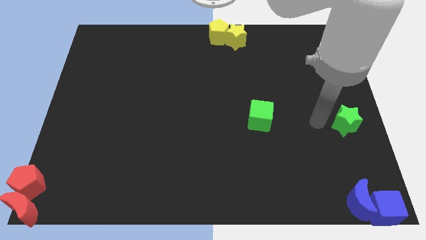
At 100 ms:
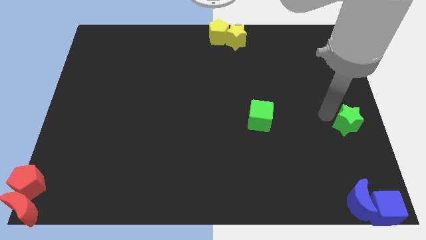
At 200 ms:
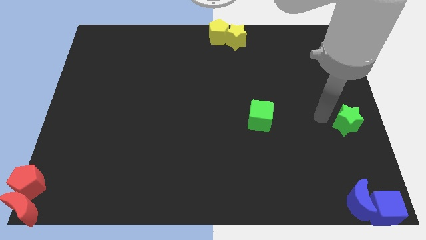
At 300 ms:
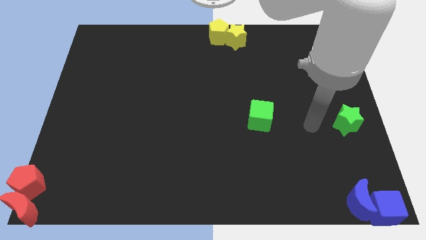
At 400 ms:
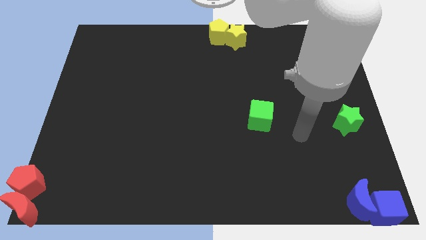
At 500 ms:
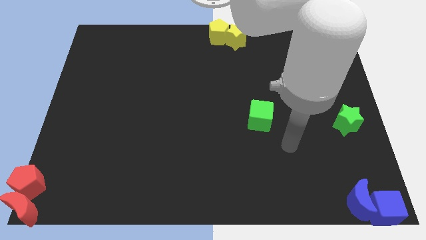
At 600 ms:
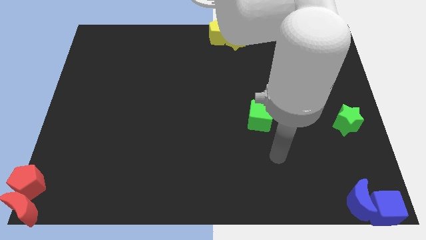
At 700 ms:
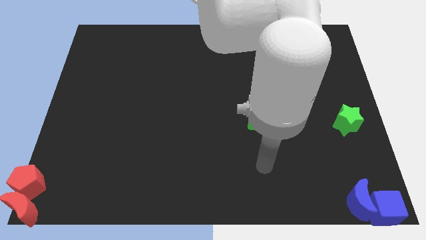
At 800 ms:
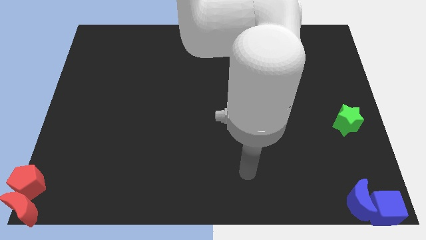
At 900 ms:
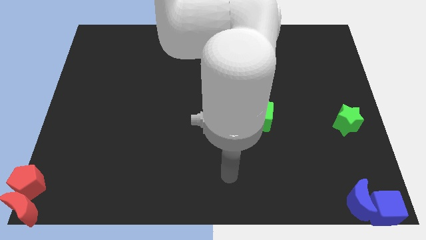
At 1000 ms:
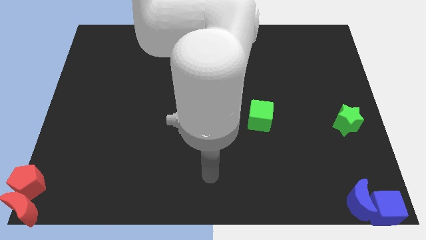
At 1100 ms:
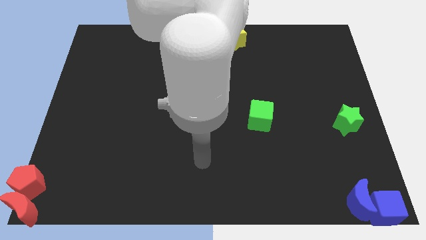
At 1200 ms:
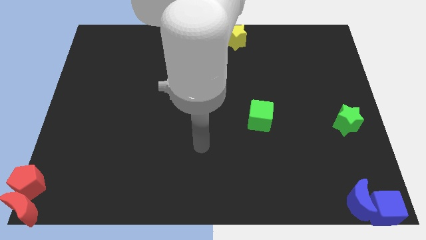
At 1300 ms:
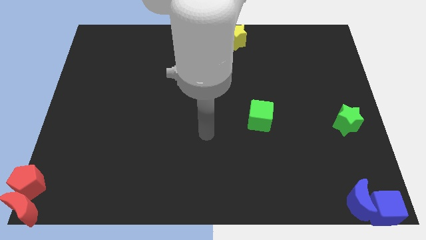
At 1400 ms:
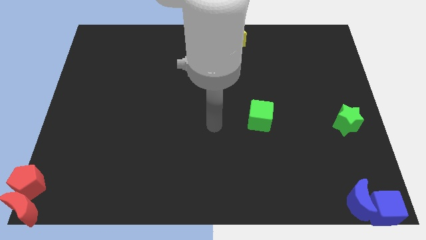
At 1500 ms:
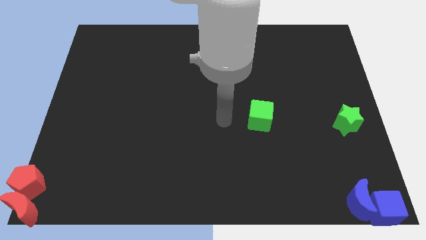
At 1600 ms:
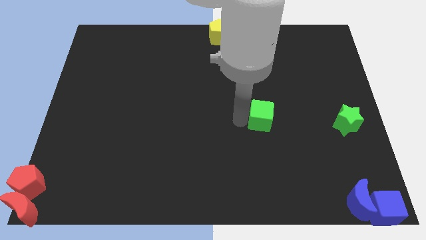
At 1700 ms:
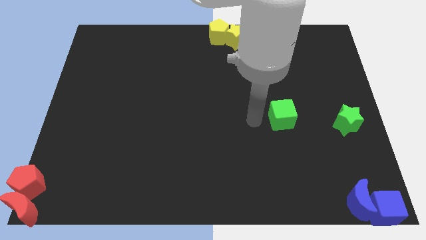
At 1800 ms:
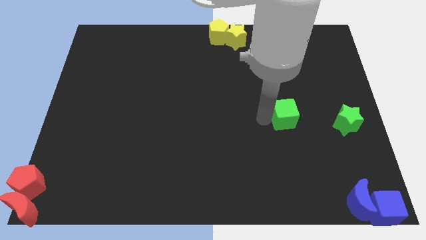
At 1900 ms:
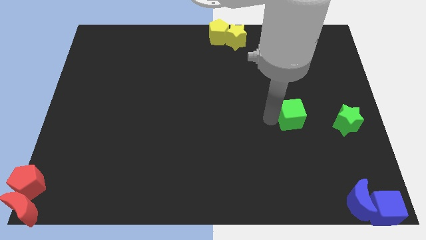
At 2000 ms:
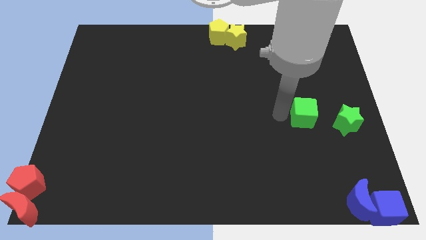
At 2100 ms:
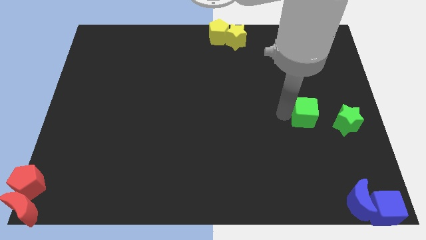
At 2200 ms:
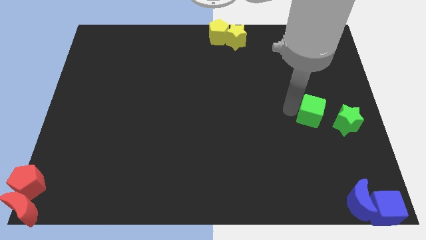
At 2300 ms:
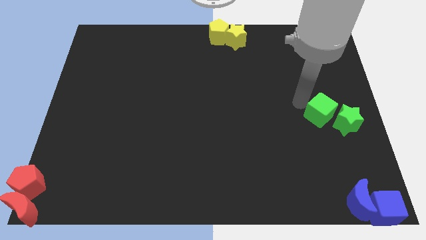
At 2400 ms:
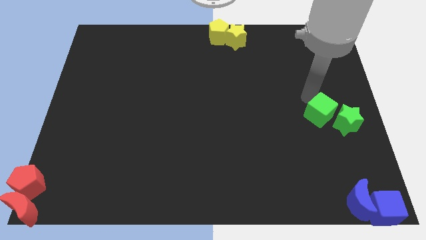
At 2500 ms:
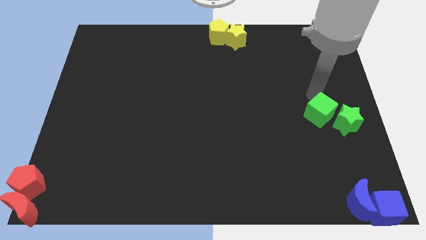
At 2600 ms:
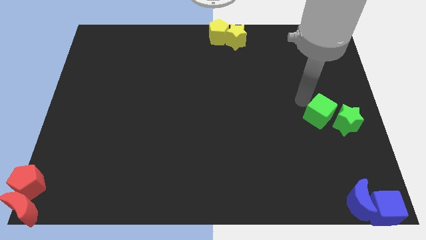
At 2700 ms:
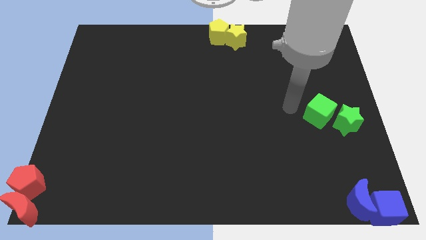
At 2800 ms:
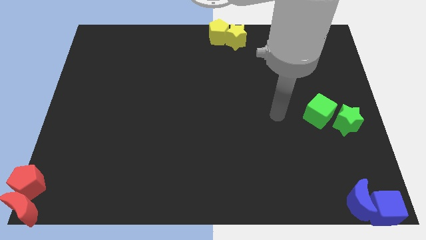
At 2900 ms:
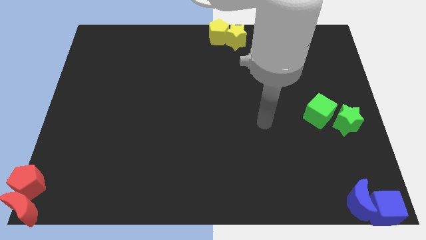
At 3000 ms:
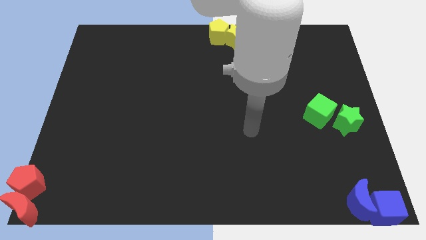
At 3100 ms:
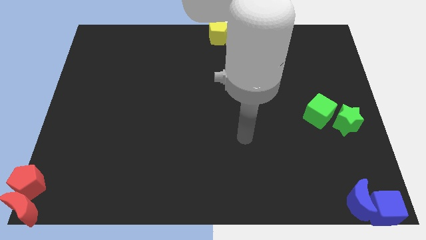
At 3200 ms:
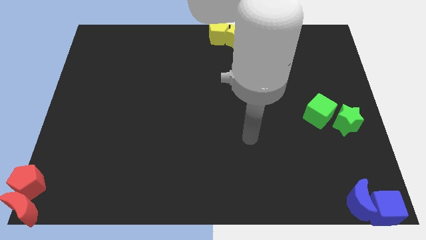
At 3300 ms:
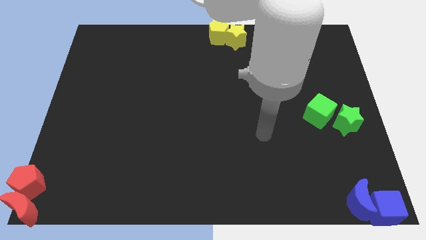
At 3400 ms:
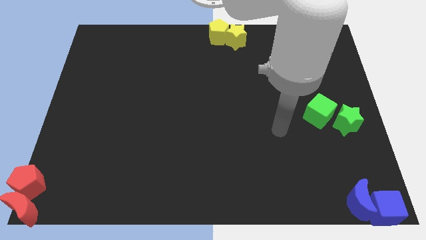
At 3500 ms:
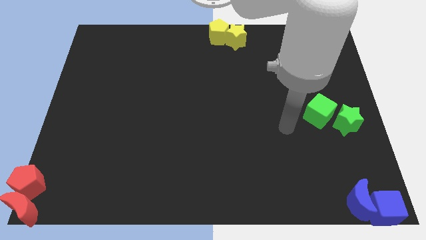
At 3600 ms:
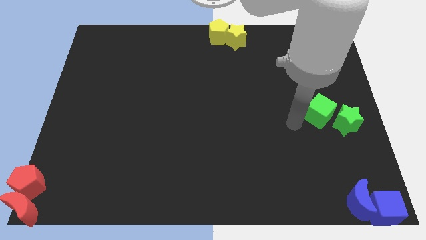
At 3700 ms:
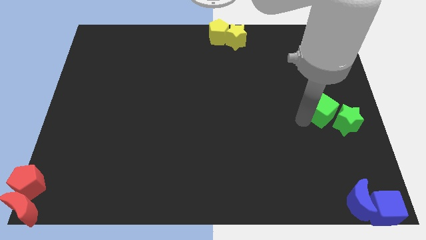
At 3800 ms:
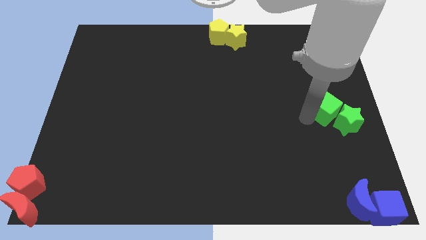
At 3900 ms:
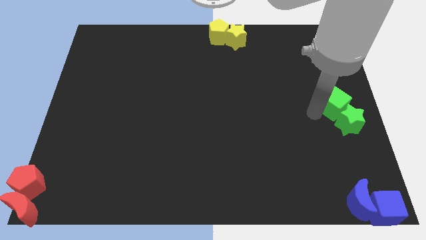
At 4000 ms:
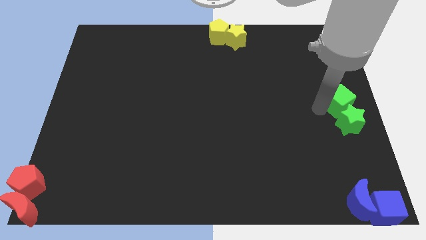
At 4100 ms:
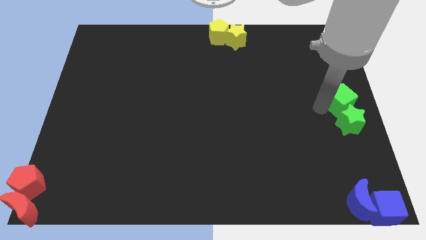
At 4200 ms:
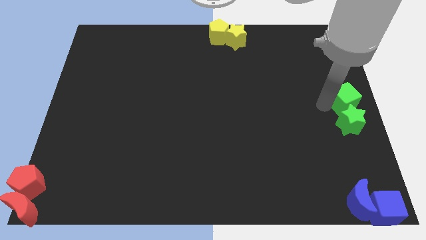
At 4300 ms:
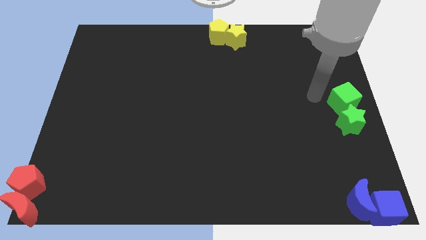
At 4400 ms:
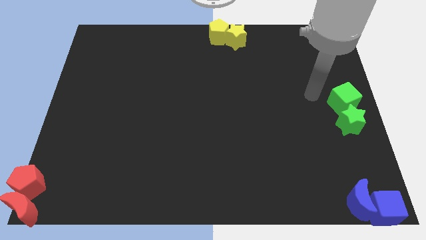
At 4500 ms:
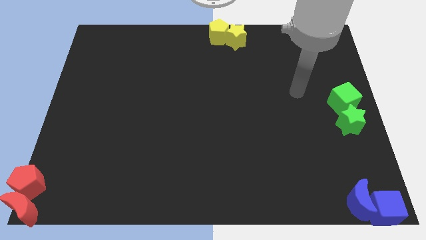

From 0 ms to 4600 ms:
slide the green cube at the center right side of the board

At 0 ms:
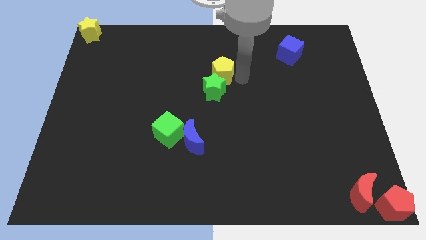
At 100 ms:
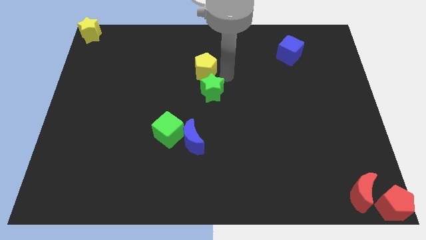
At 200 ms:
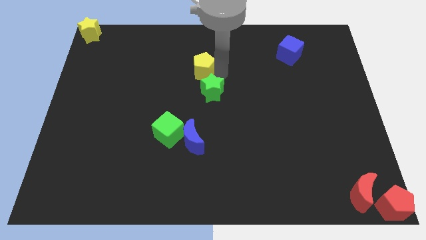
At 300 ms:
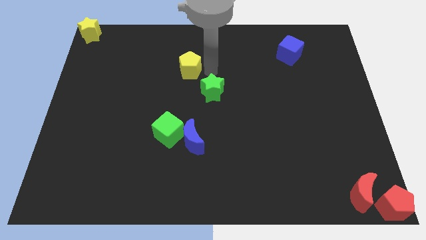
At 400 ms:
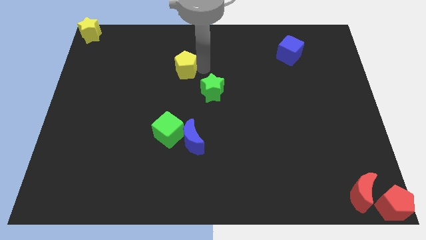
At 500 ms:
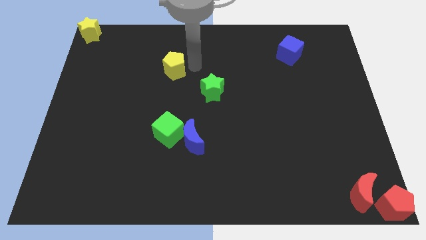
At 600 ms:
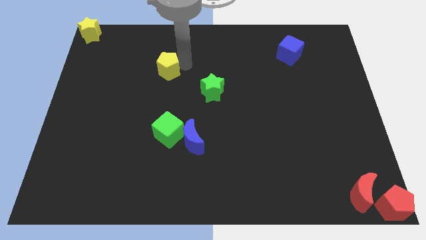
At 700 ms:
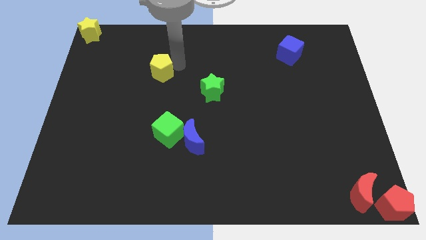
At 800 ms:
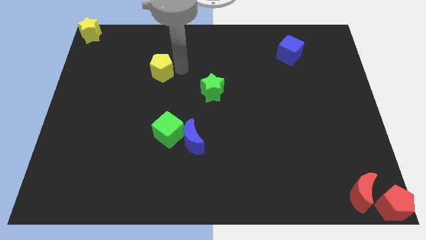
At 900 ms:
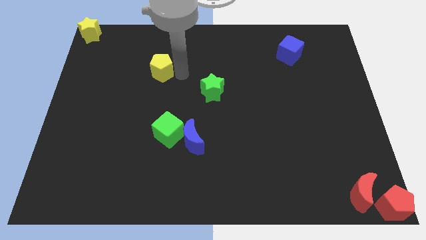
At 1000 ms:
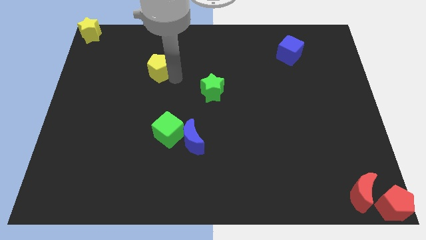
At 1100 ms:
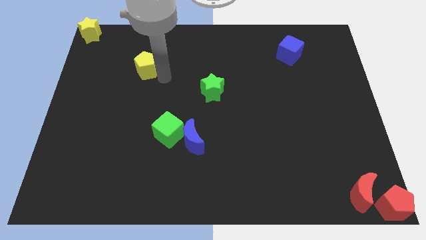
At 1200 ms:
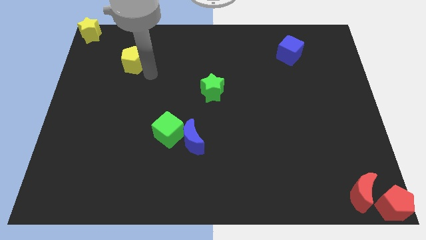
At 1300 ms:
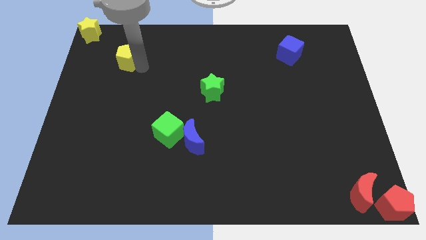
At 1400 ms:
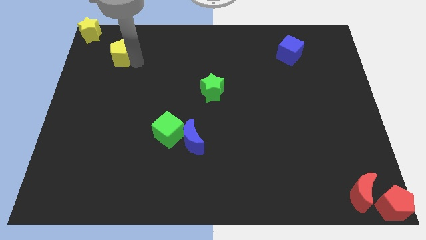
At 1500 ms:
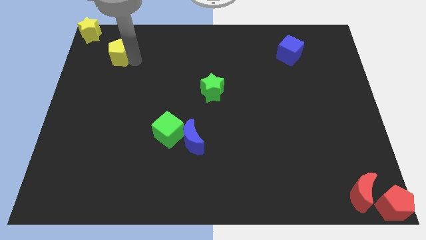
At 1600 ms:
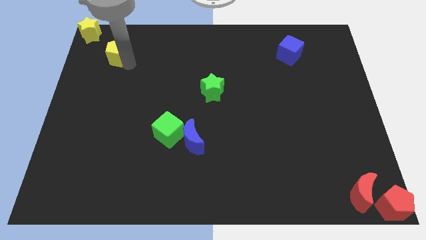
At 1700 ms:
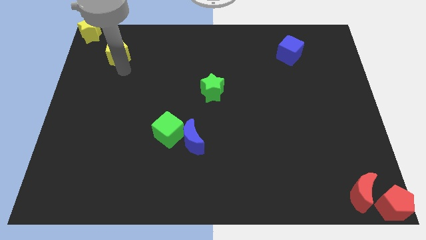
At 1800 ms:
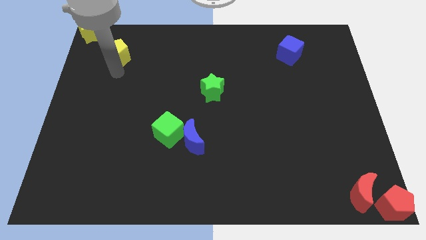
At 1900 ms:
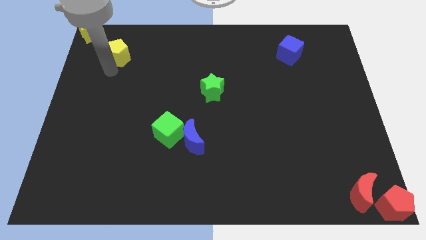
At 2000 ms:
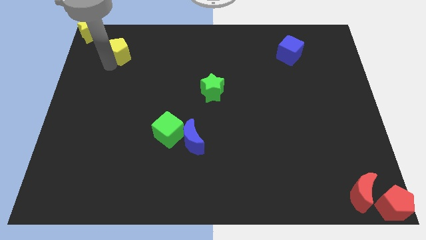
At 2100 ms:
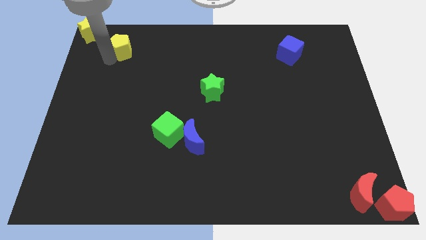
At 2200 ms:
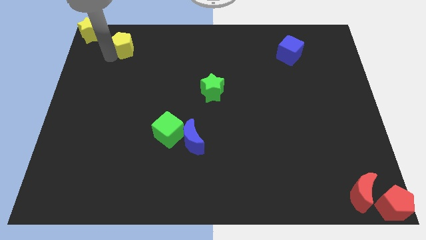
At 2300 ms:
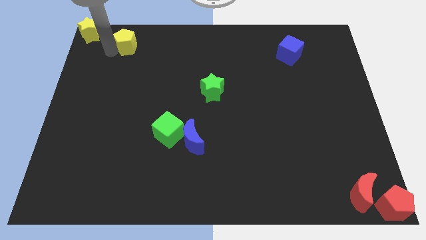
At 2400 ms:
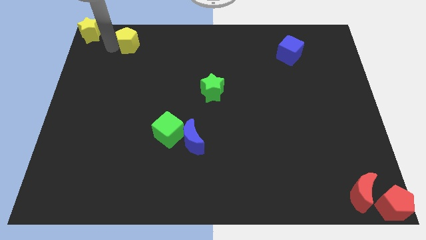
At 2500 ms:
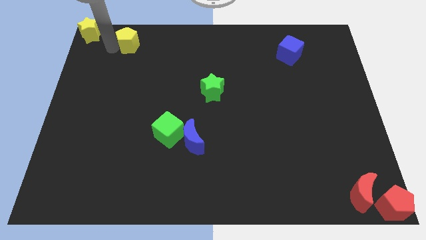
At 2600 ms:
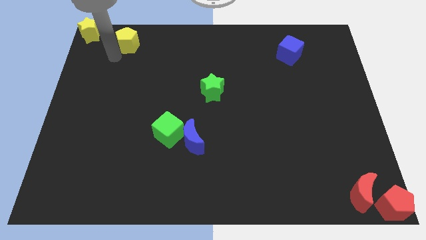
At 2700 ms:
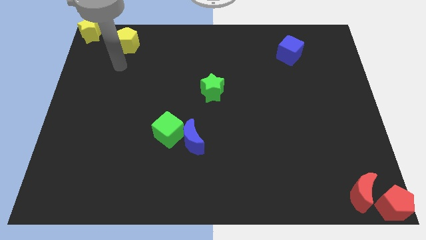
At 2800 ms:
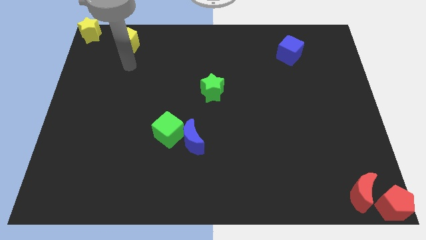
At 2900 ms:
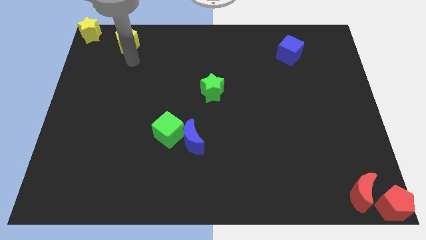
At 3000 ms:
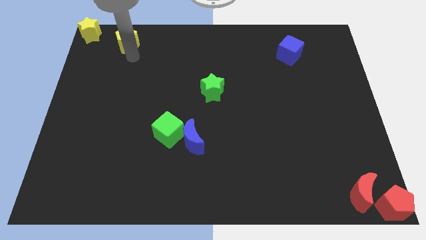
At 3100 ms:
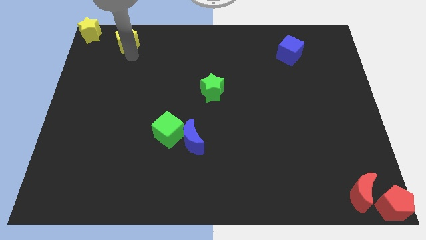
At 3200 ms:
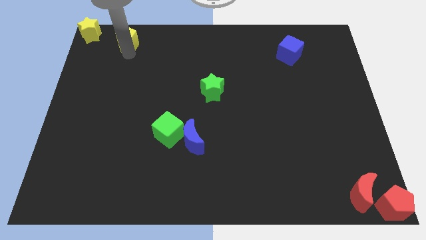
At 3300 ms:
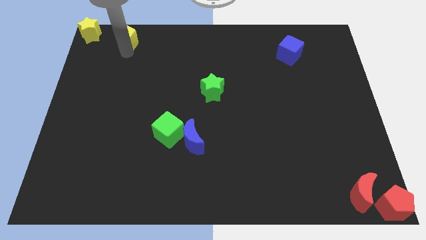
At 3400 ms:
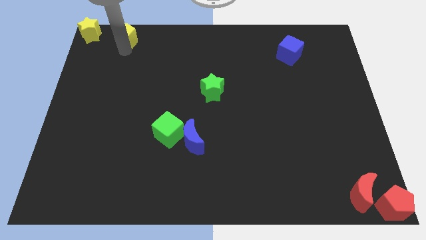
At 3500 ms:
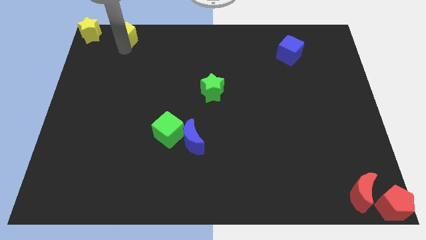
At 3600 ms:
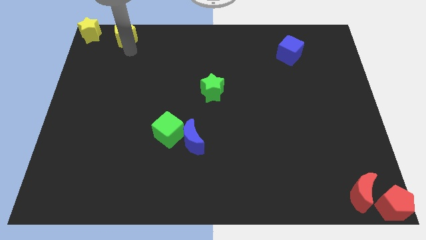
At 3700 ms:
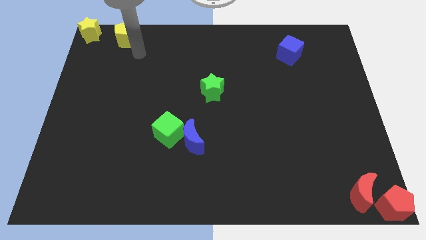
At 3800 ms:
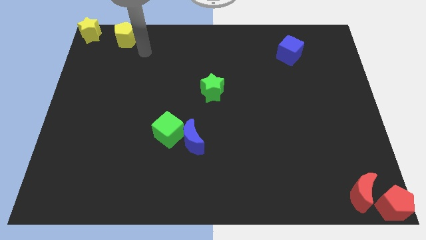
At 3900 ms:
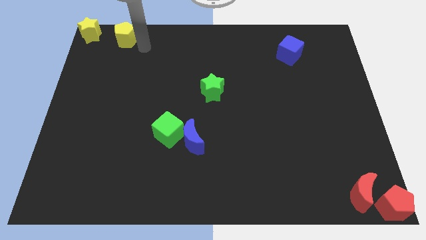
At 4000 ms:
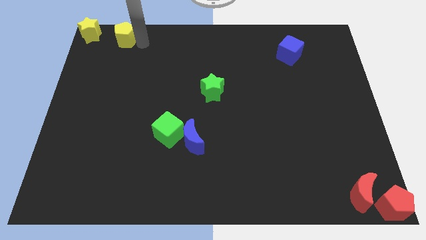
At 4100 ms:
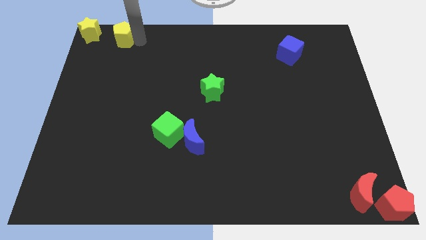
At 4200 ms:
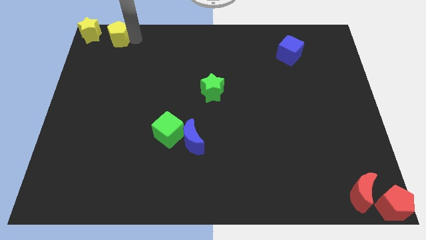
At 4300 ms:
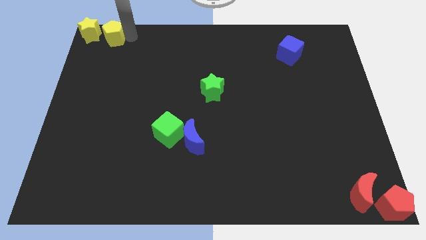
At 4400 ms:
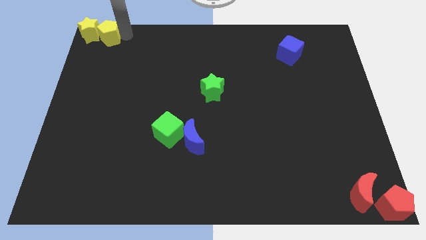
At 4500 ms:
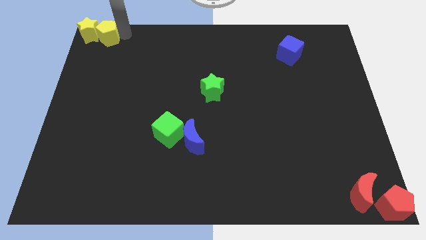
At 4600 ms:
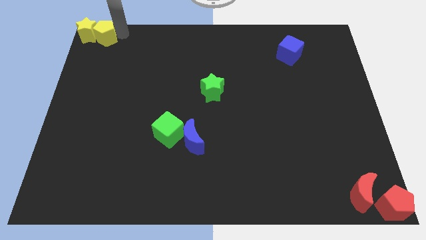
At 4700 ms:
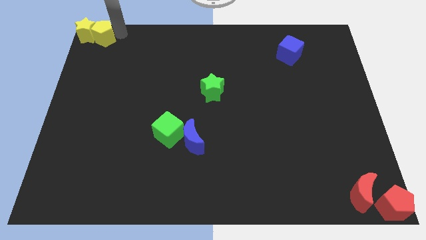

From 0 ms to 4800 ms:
place the yellow pentagon at the top left corner of the board
